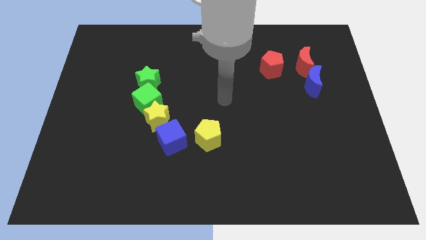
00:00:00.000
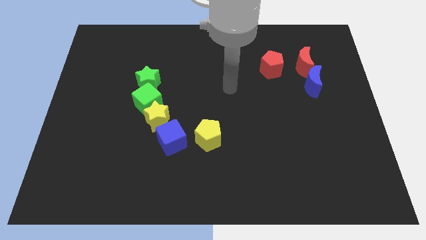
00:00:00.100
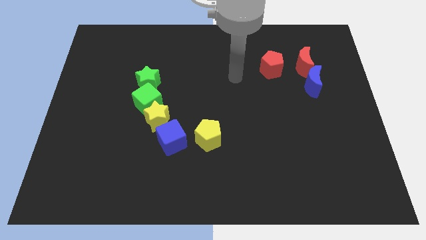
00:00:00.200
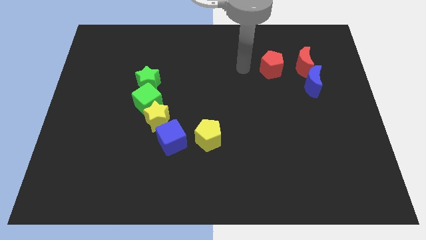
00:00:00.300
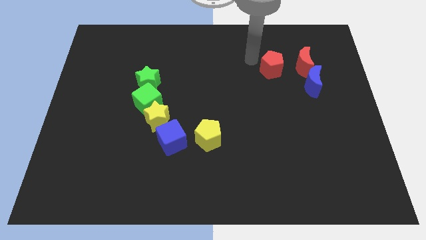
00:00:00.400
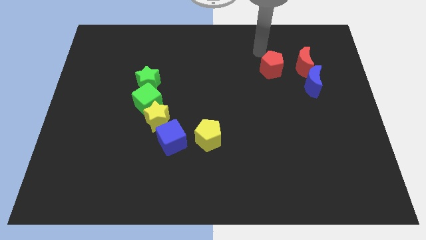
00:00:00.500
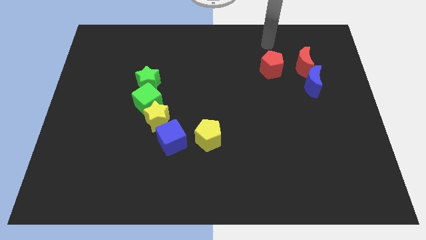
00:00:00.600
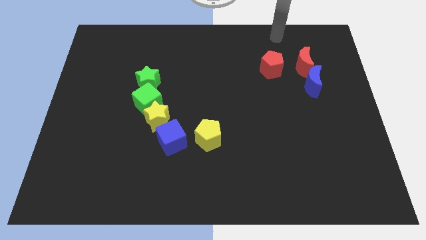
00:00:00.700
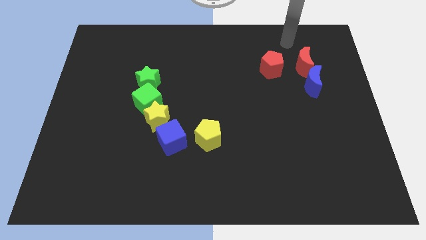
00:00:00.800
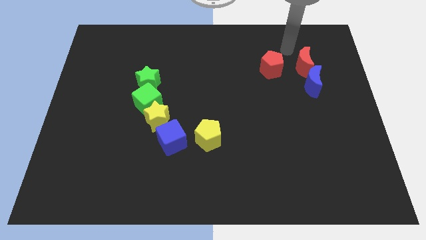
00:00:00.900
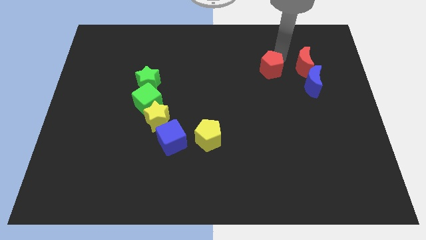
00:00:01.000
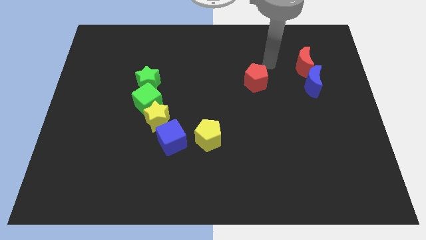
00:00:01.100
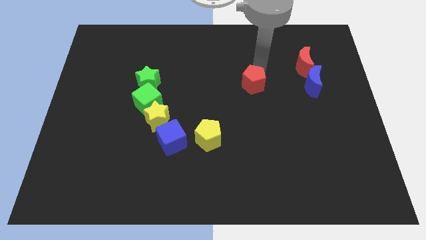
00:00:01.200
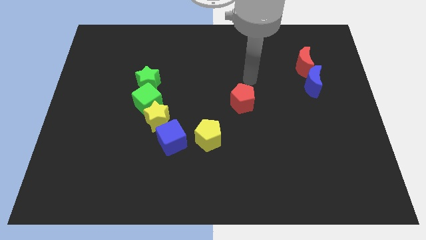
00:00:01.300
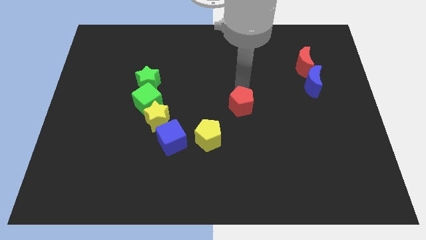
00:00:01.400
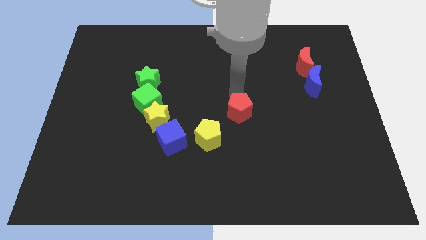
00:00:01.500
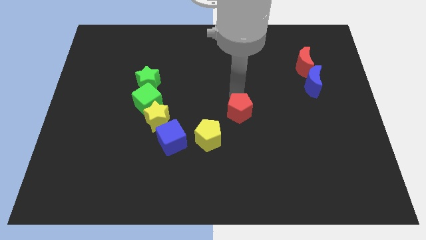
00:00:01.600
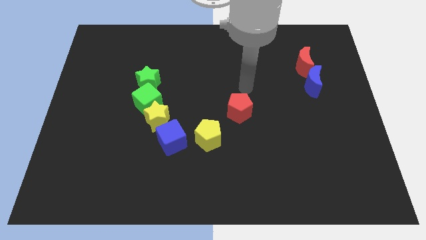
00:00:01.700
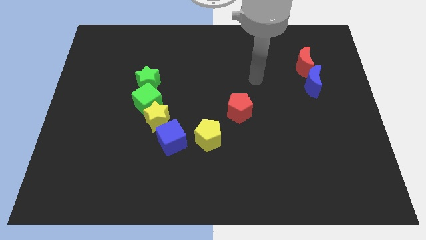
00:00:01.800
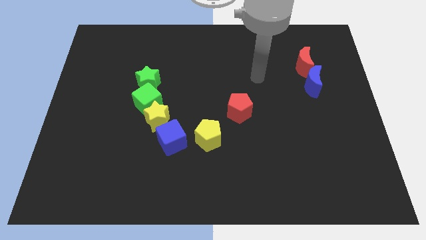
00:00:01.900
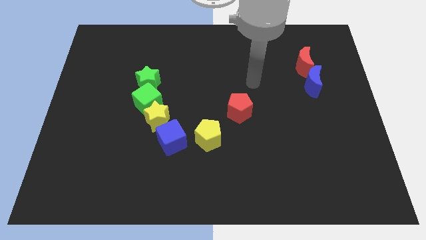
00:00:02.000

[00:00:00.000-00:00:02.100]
move the red pentagon diagonal to the red moon

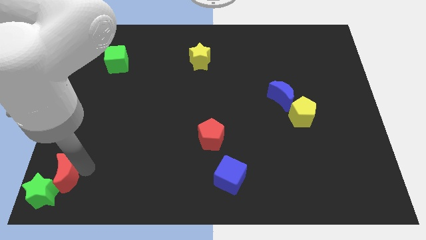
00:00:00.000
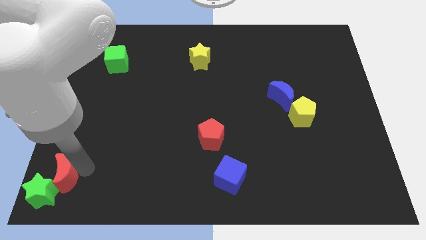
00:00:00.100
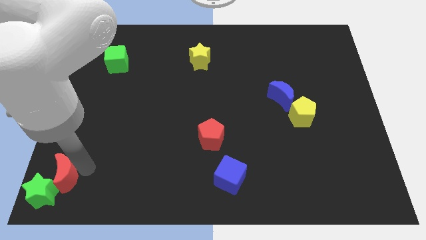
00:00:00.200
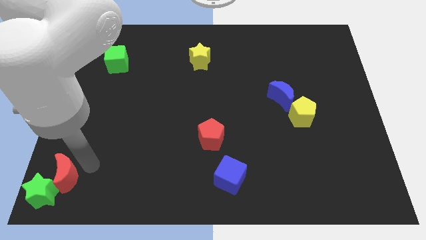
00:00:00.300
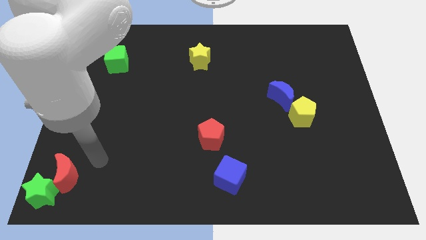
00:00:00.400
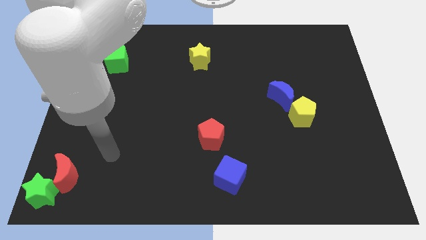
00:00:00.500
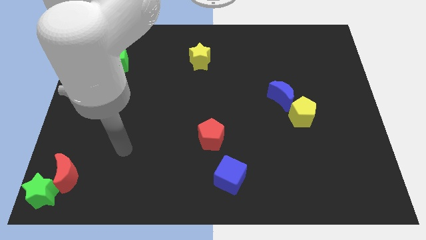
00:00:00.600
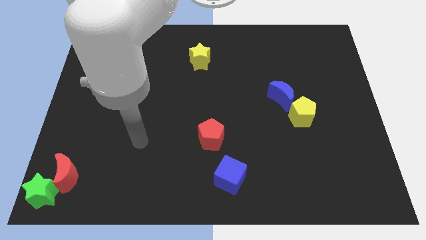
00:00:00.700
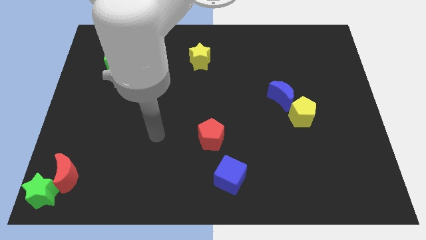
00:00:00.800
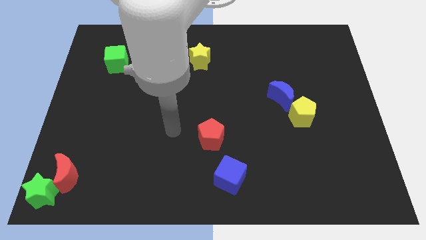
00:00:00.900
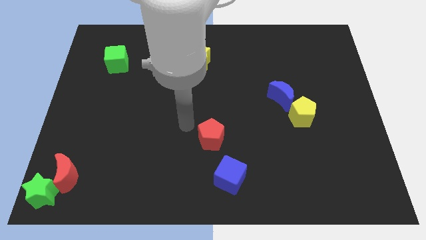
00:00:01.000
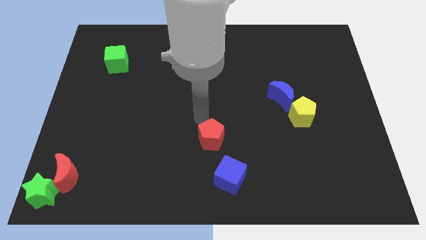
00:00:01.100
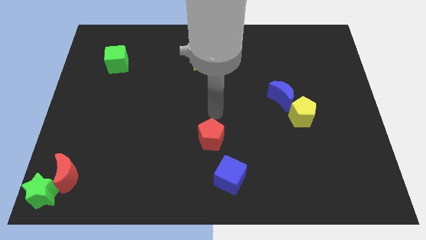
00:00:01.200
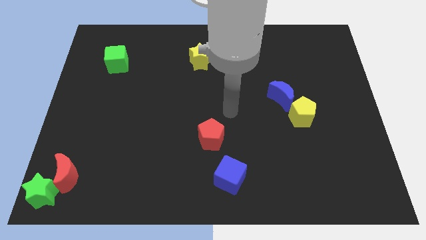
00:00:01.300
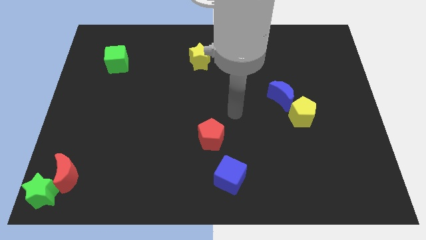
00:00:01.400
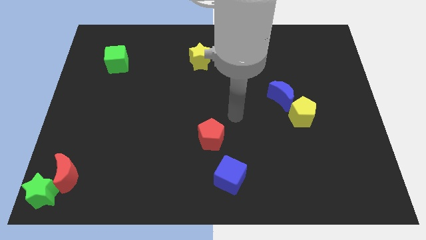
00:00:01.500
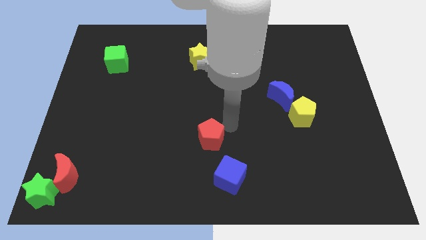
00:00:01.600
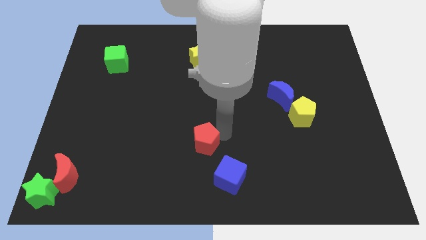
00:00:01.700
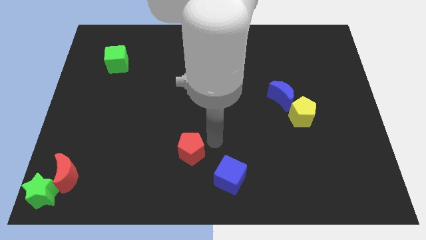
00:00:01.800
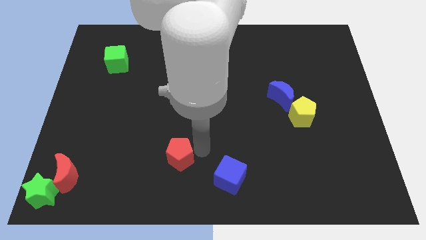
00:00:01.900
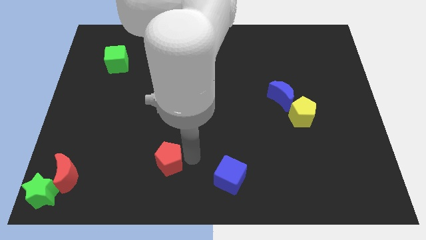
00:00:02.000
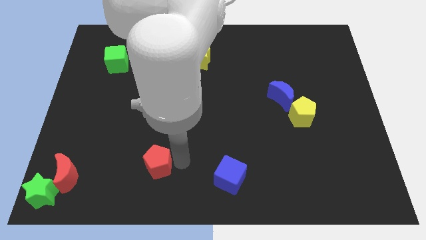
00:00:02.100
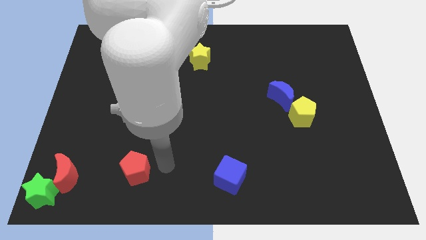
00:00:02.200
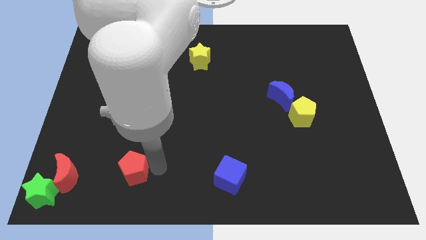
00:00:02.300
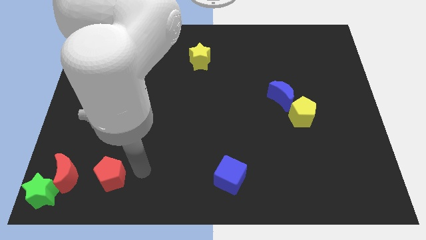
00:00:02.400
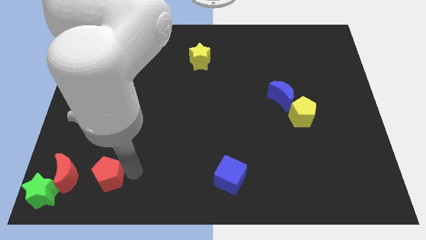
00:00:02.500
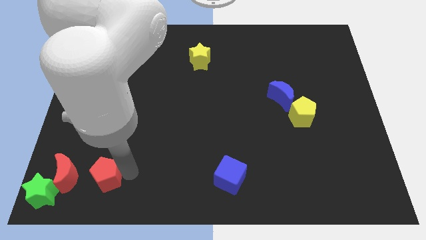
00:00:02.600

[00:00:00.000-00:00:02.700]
push red pentagon towards the red moon

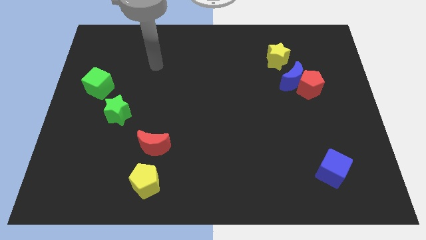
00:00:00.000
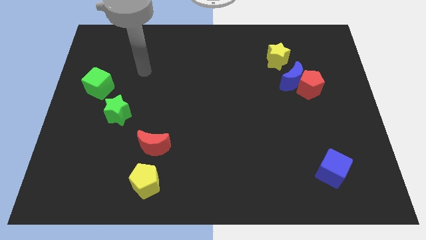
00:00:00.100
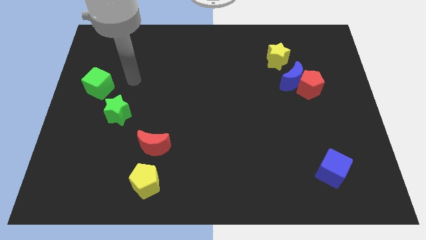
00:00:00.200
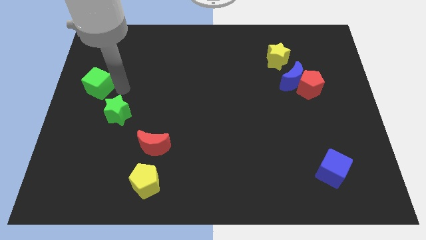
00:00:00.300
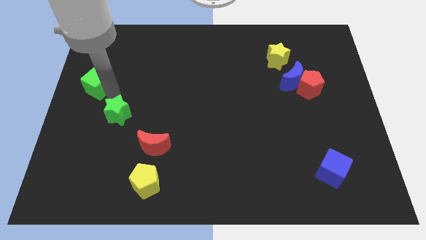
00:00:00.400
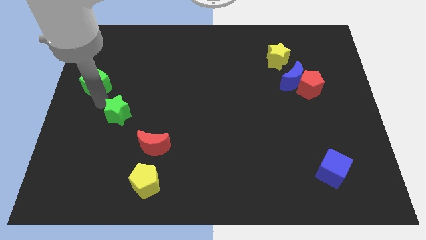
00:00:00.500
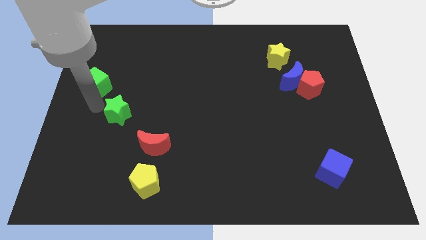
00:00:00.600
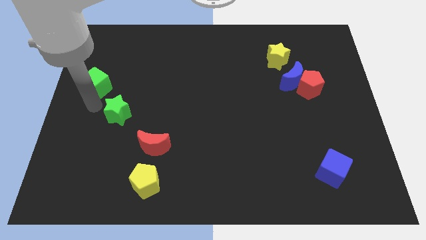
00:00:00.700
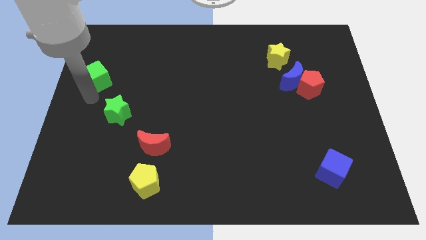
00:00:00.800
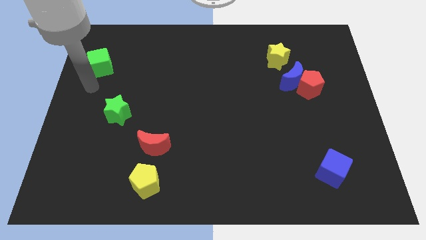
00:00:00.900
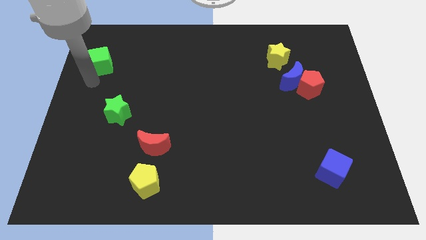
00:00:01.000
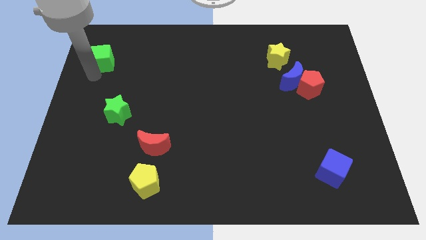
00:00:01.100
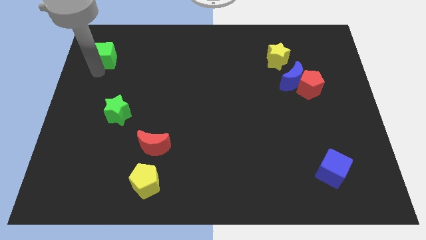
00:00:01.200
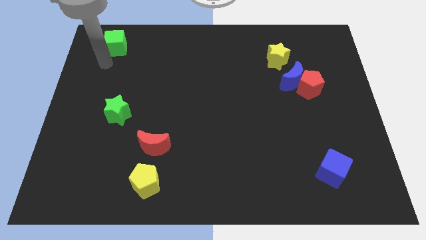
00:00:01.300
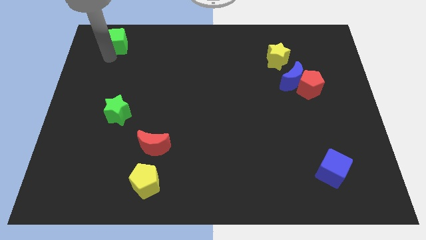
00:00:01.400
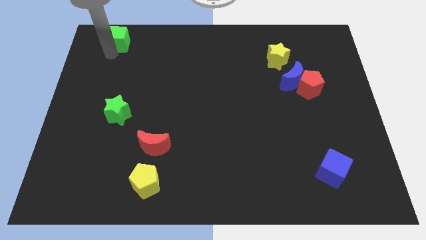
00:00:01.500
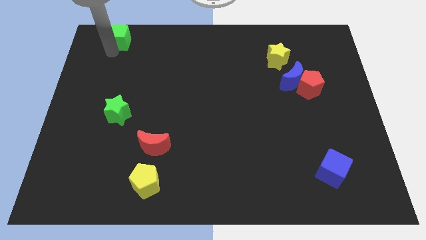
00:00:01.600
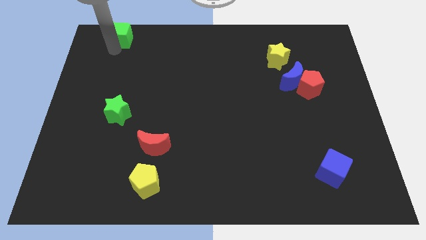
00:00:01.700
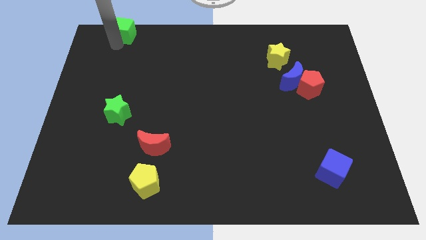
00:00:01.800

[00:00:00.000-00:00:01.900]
place the green cube at top left side of the board

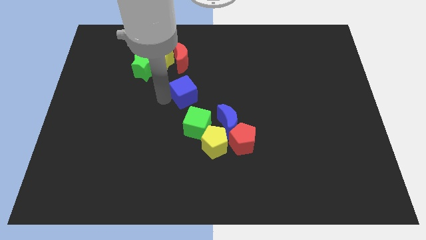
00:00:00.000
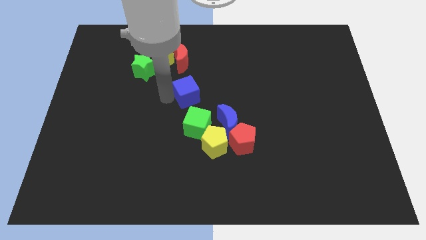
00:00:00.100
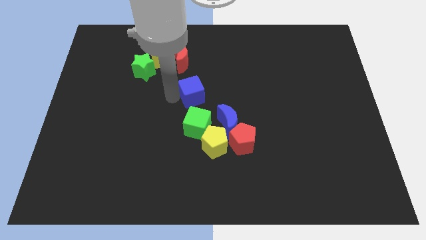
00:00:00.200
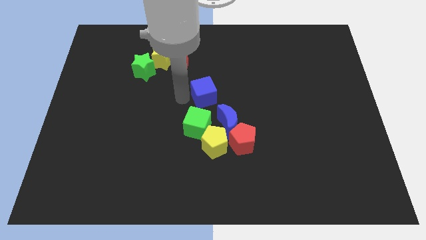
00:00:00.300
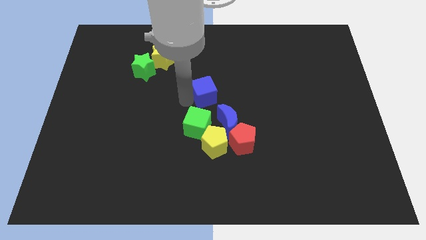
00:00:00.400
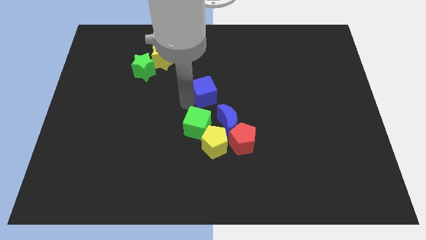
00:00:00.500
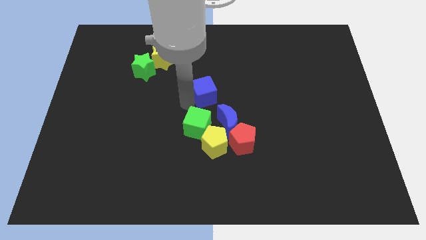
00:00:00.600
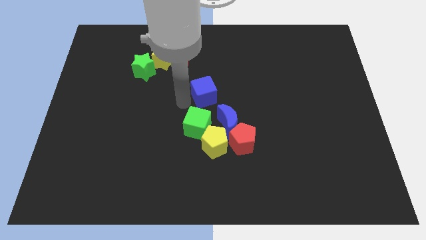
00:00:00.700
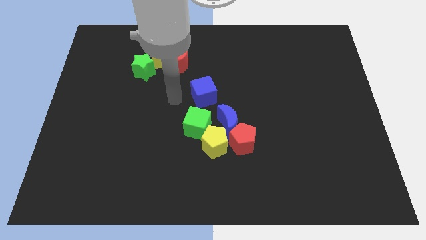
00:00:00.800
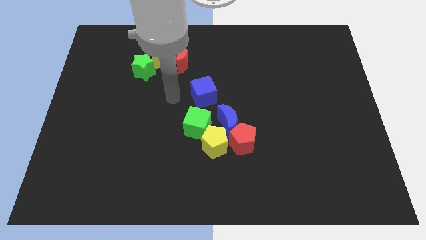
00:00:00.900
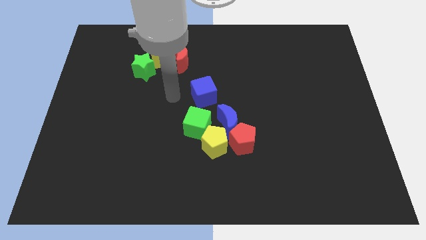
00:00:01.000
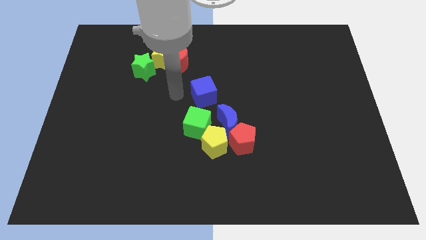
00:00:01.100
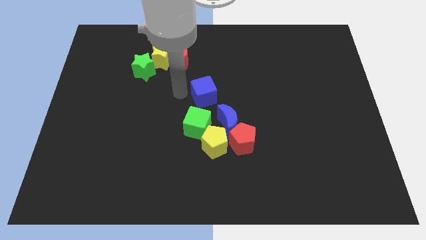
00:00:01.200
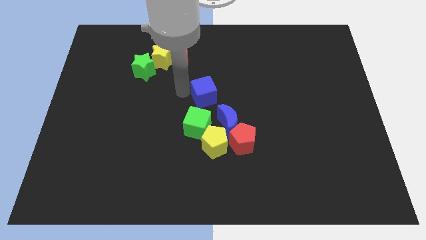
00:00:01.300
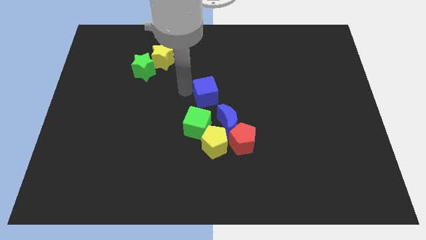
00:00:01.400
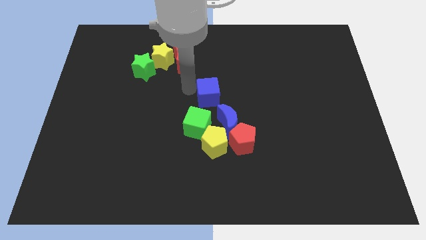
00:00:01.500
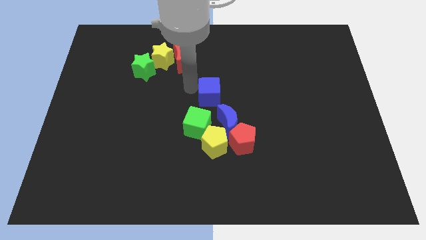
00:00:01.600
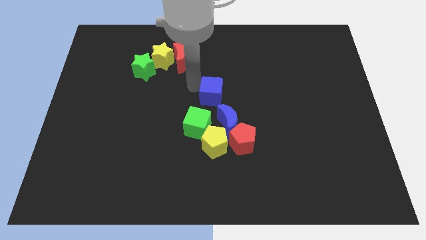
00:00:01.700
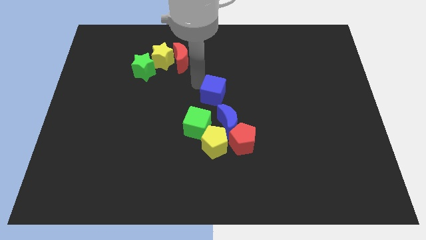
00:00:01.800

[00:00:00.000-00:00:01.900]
place the blue cube at the top of the green cube

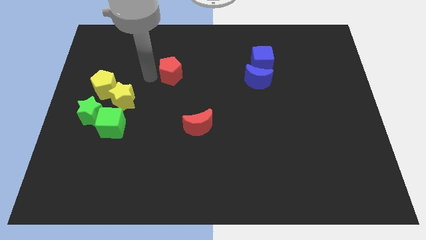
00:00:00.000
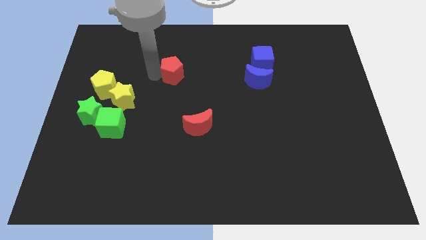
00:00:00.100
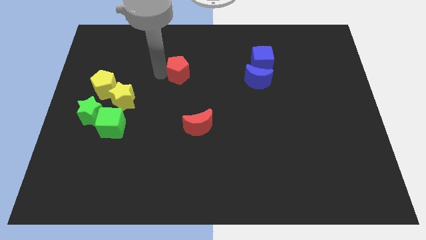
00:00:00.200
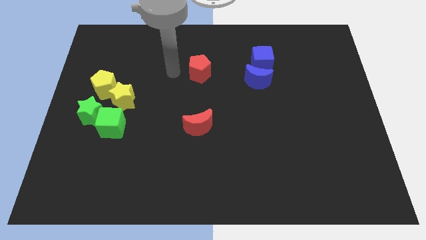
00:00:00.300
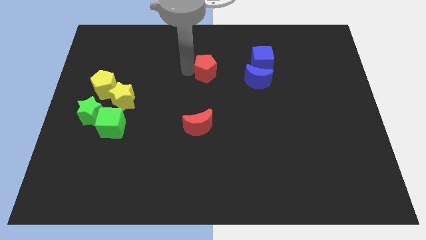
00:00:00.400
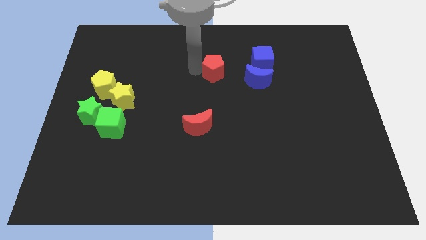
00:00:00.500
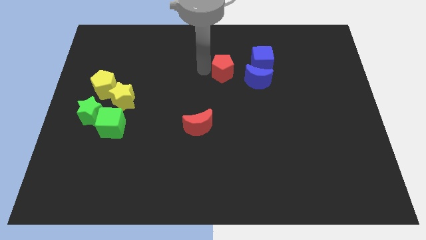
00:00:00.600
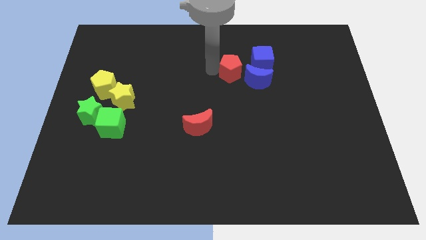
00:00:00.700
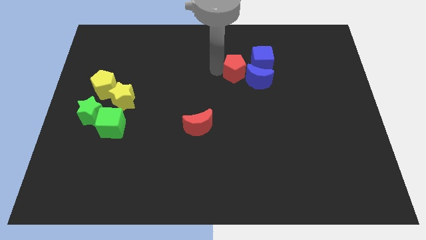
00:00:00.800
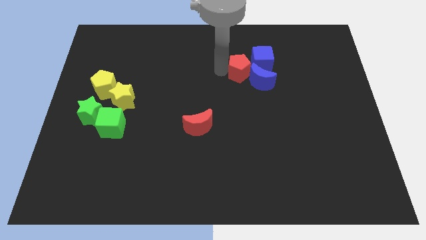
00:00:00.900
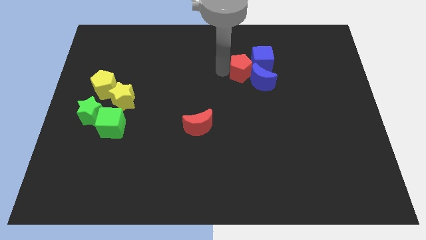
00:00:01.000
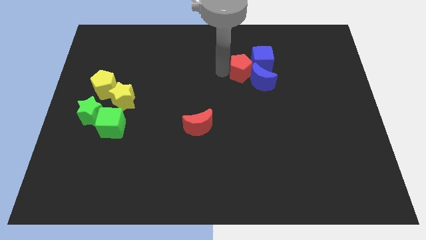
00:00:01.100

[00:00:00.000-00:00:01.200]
push the red pentagon into blue moon
